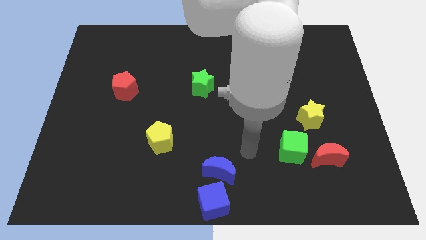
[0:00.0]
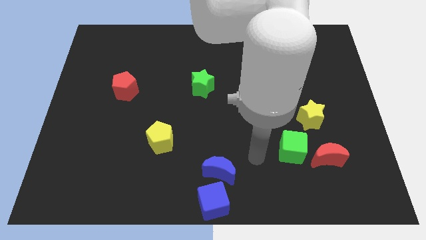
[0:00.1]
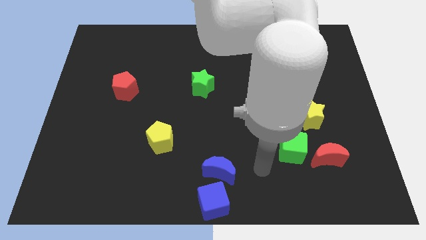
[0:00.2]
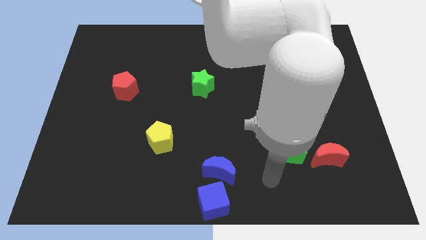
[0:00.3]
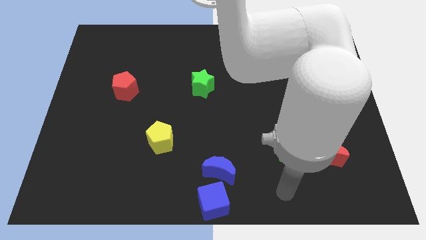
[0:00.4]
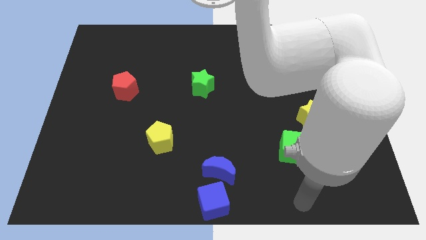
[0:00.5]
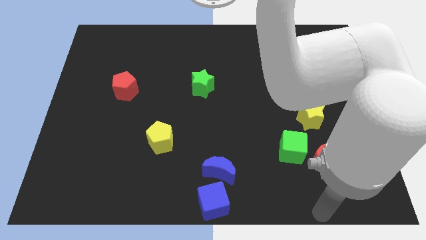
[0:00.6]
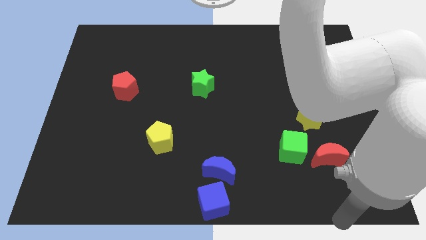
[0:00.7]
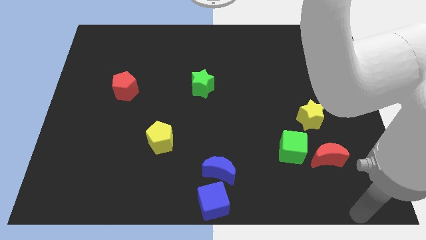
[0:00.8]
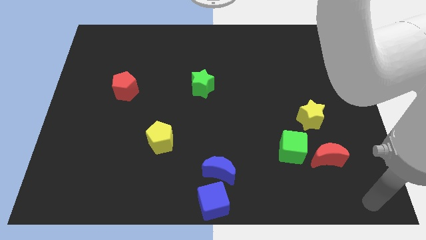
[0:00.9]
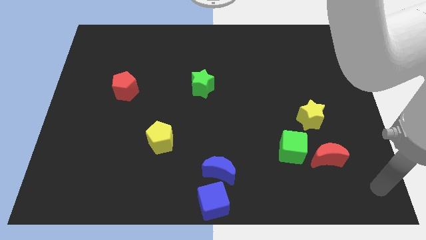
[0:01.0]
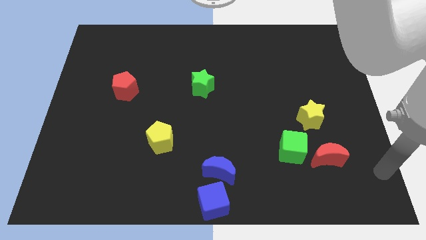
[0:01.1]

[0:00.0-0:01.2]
place your arm at bottom right of board

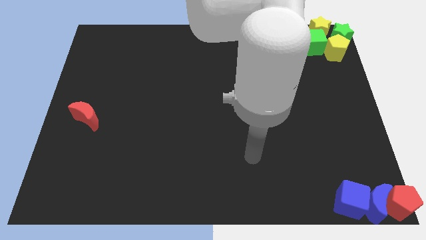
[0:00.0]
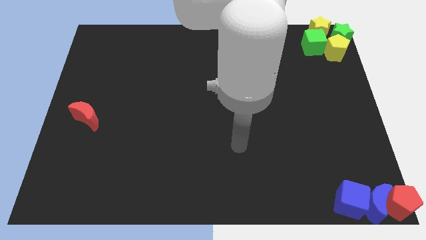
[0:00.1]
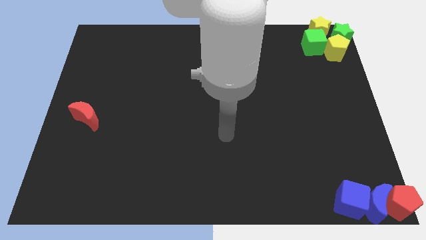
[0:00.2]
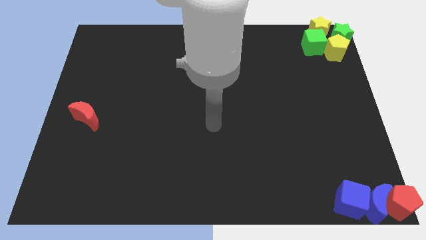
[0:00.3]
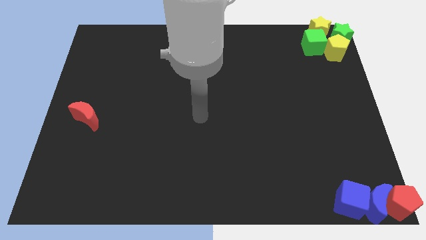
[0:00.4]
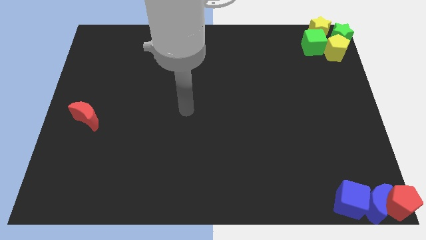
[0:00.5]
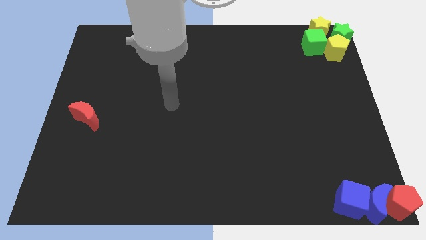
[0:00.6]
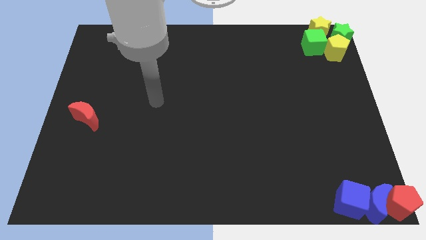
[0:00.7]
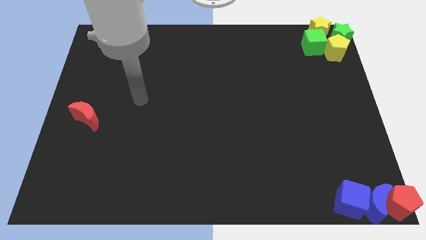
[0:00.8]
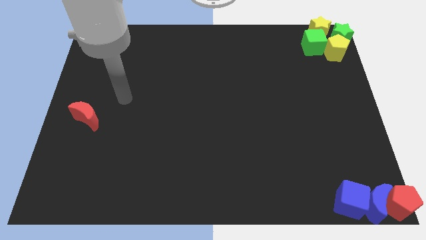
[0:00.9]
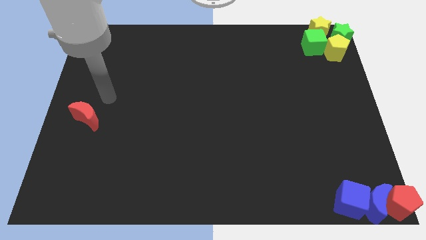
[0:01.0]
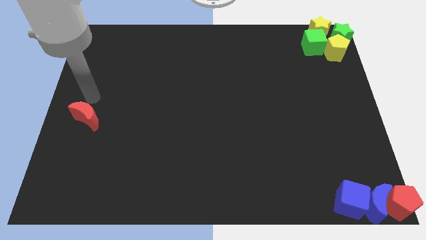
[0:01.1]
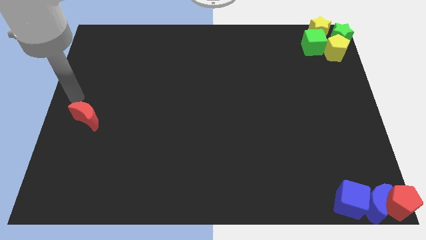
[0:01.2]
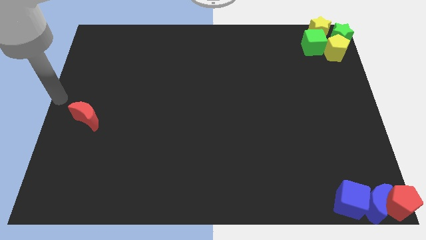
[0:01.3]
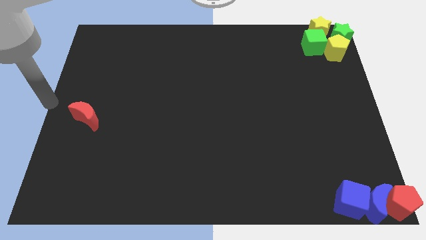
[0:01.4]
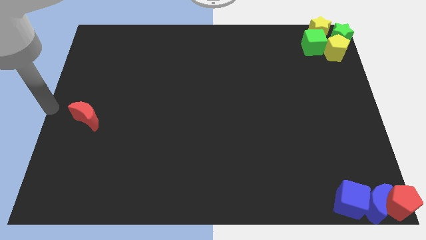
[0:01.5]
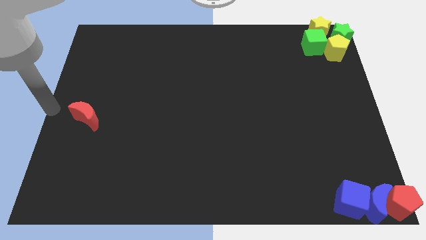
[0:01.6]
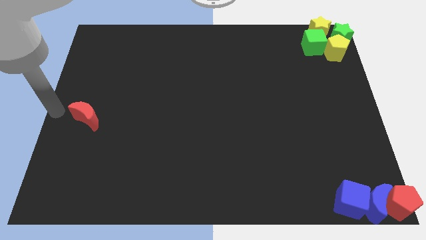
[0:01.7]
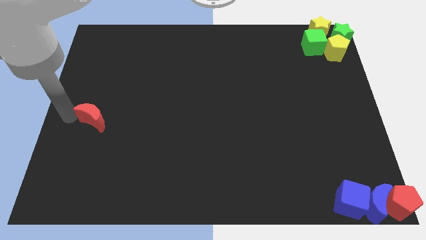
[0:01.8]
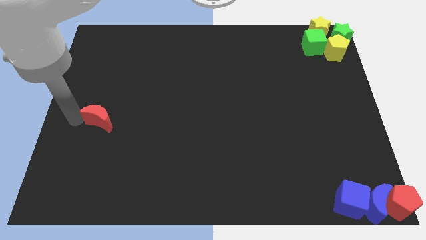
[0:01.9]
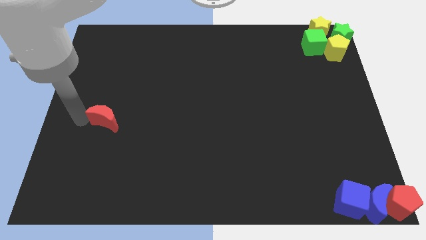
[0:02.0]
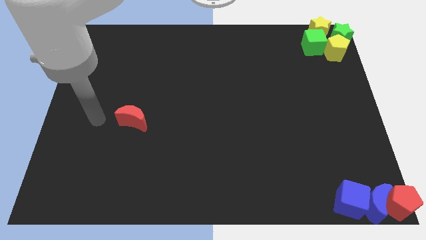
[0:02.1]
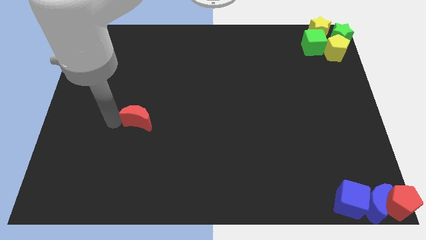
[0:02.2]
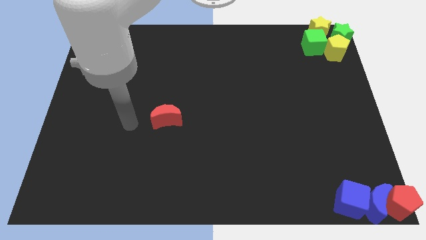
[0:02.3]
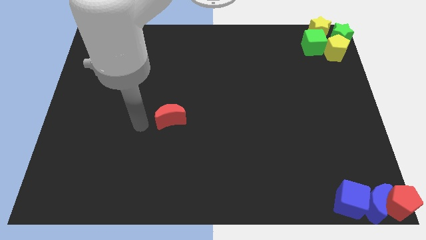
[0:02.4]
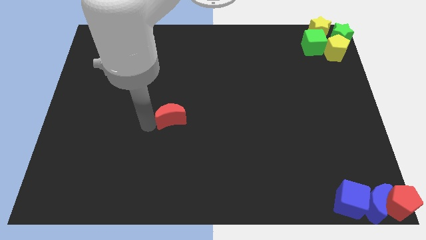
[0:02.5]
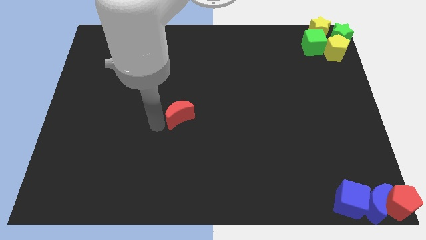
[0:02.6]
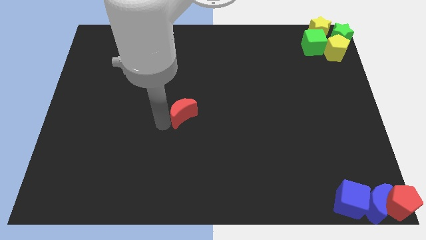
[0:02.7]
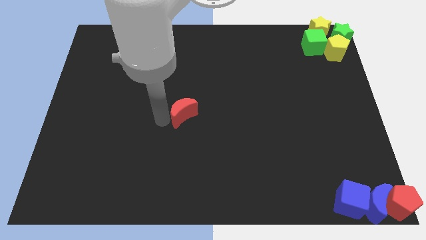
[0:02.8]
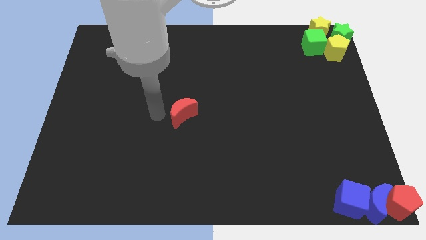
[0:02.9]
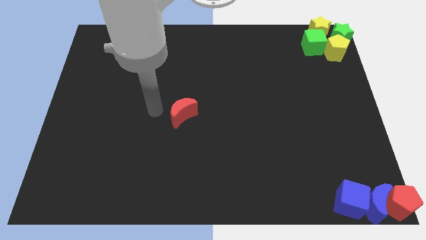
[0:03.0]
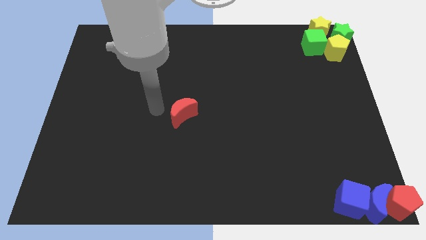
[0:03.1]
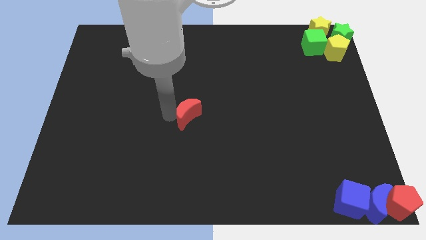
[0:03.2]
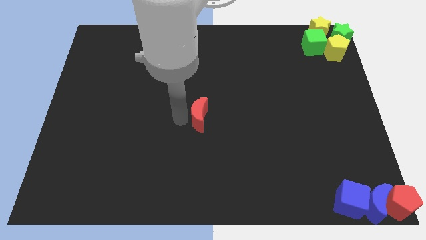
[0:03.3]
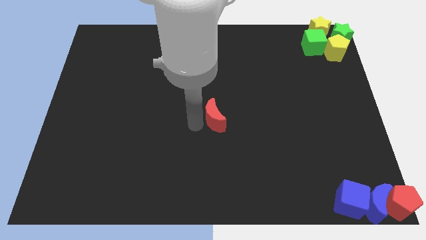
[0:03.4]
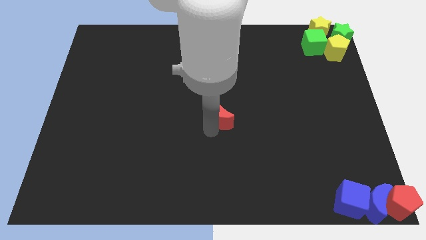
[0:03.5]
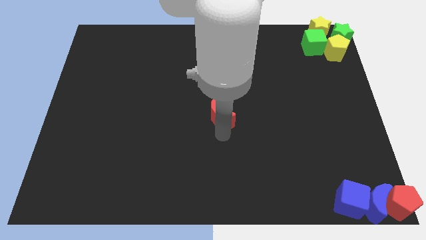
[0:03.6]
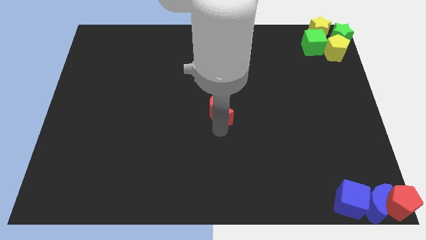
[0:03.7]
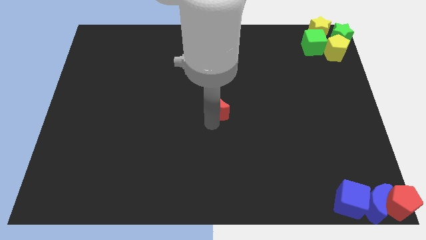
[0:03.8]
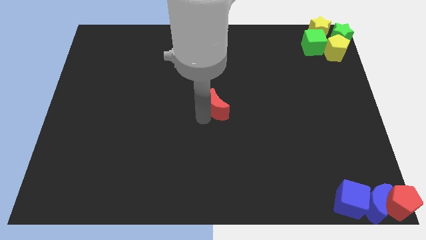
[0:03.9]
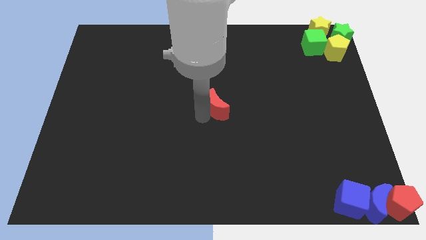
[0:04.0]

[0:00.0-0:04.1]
move the red crescent to the center of the board

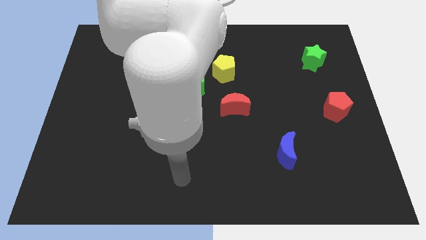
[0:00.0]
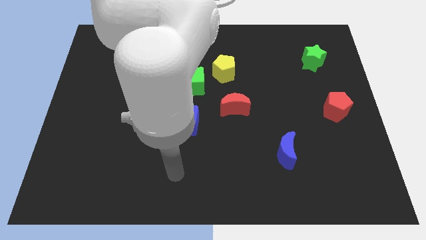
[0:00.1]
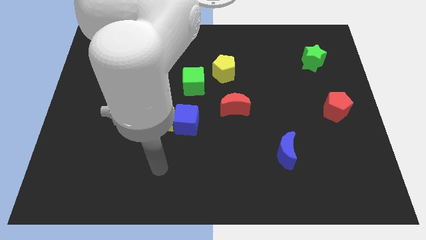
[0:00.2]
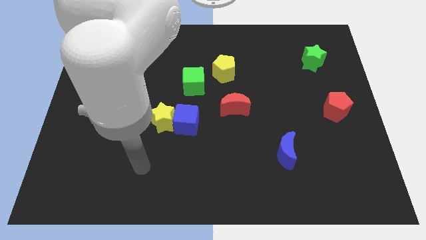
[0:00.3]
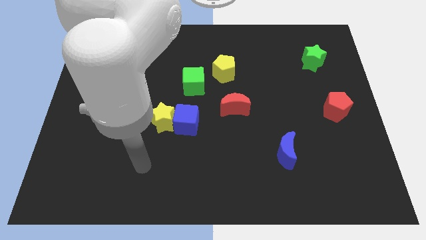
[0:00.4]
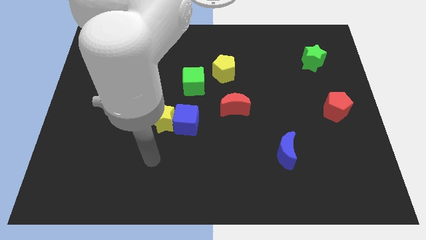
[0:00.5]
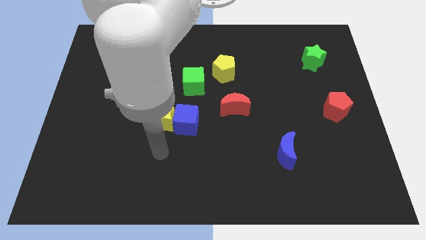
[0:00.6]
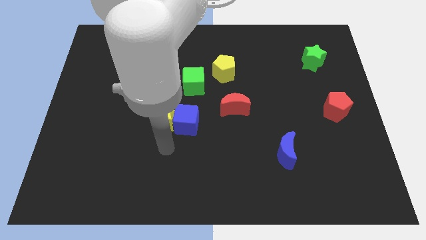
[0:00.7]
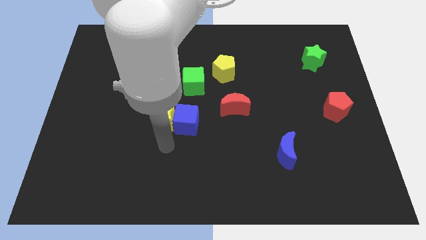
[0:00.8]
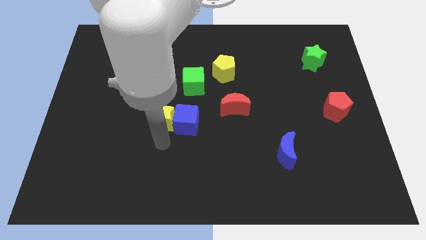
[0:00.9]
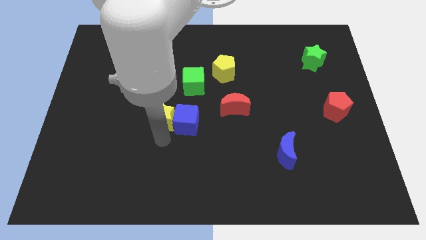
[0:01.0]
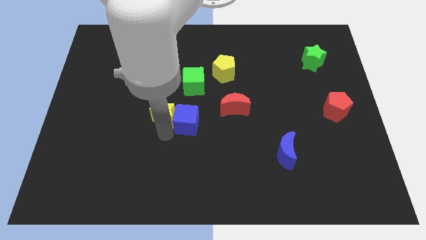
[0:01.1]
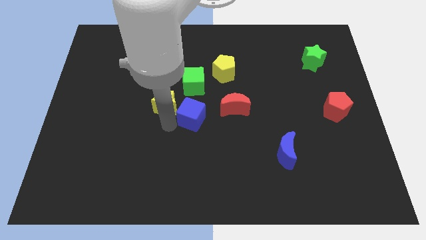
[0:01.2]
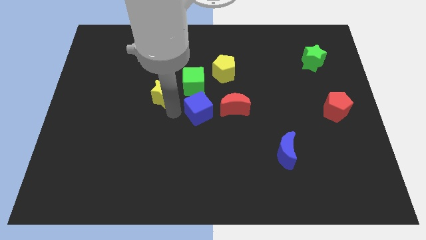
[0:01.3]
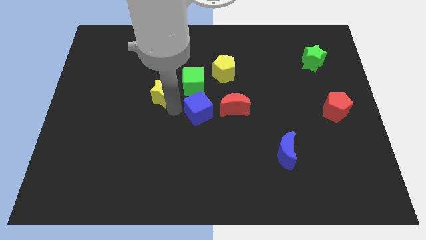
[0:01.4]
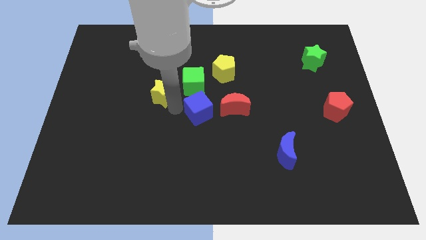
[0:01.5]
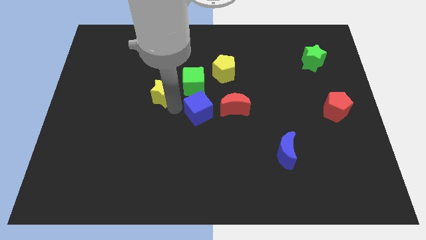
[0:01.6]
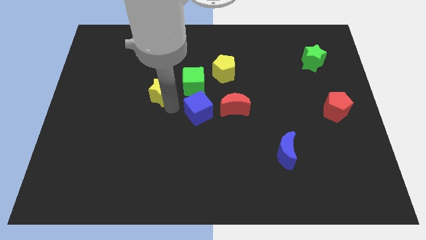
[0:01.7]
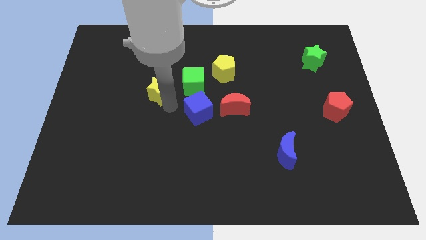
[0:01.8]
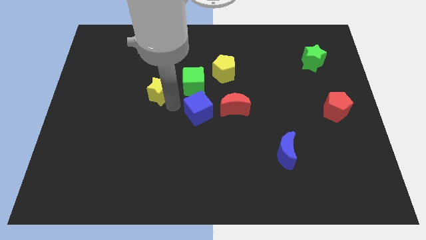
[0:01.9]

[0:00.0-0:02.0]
separate the yellow star from the blue cube

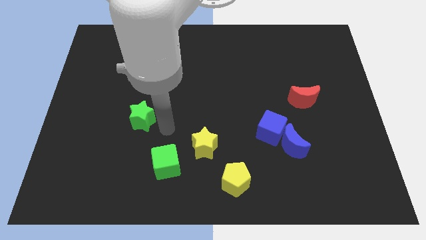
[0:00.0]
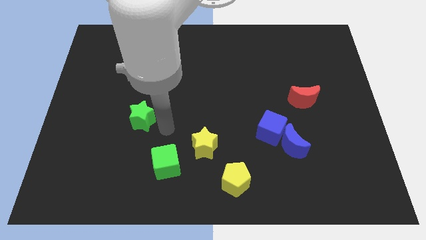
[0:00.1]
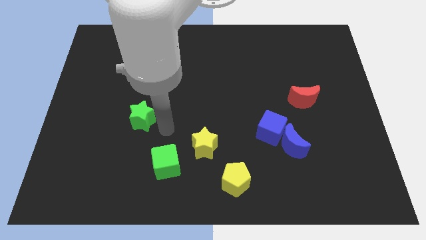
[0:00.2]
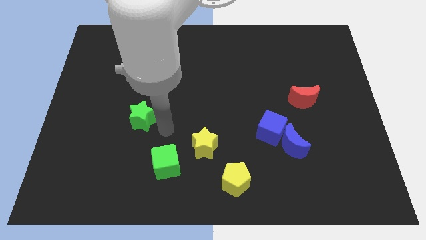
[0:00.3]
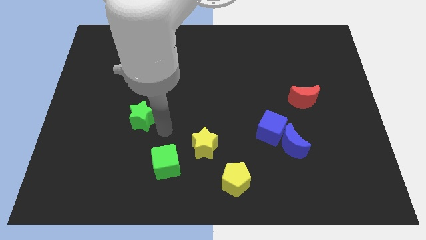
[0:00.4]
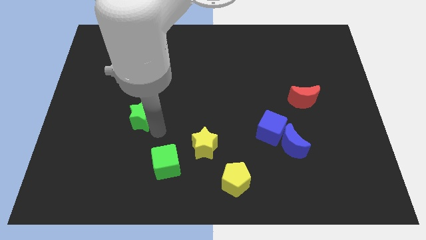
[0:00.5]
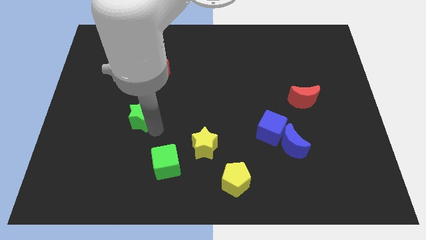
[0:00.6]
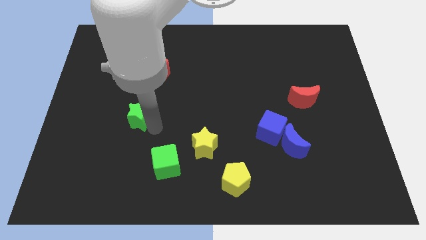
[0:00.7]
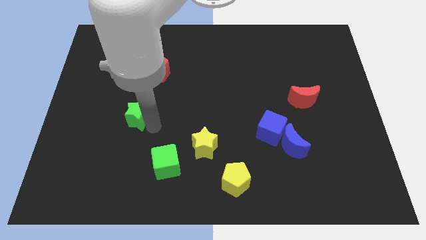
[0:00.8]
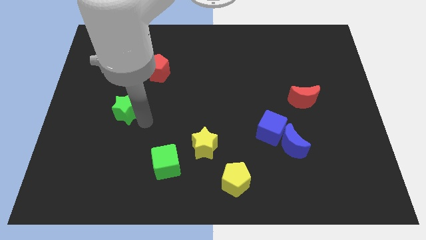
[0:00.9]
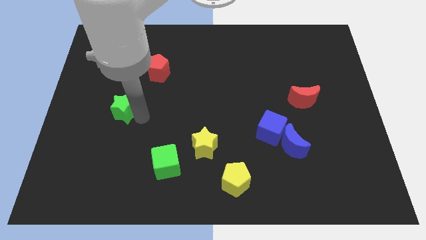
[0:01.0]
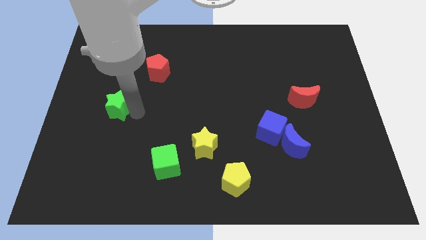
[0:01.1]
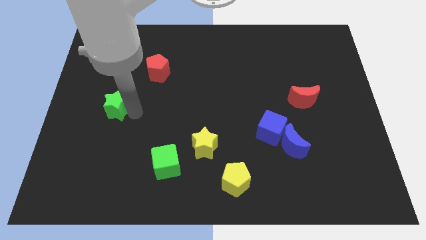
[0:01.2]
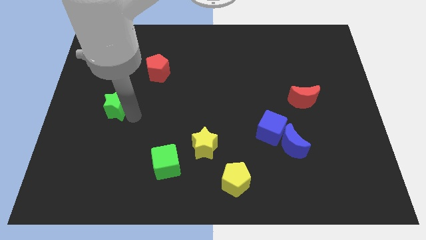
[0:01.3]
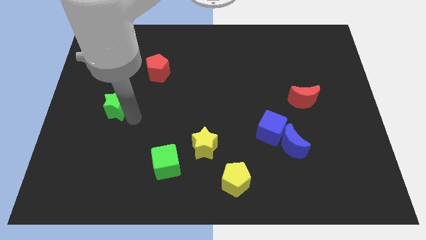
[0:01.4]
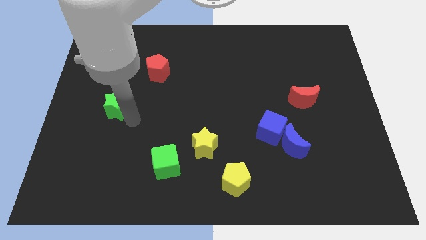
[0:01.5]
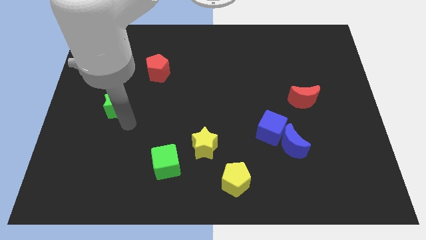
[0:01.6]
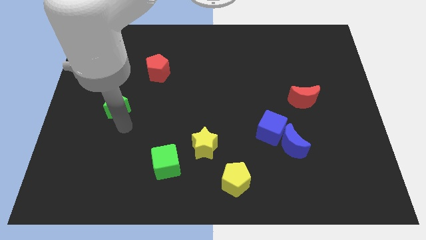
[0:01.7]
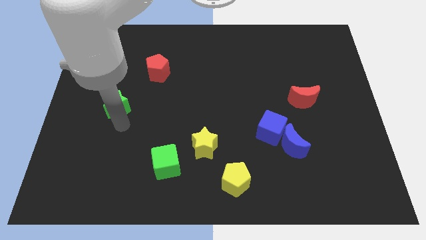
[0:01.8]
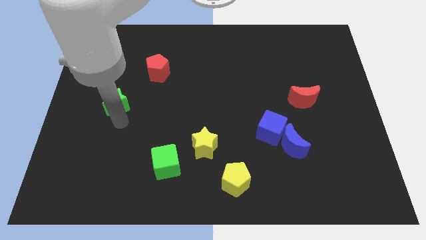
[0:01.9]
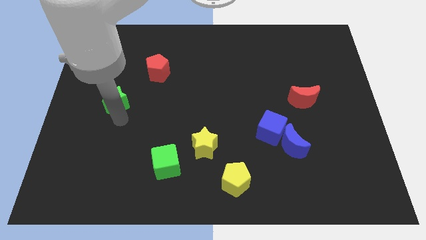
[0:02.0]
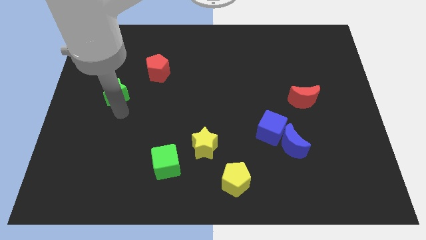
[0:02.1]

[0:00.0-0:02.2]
place the green star diagonally bottom left to the red pentagon
